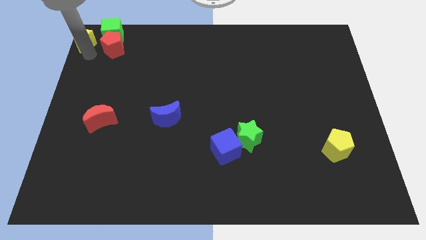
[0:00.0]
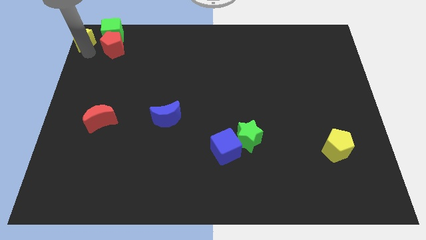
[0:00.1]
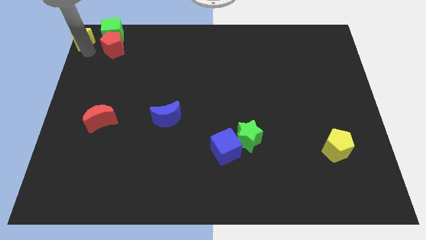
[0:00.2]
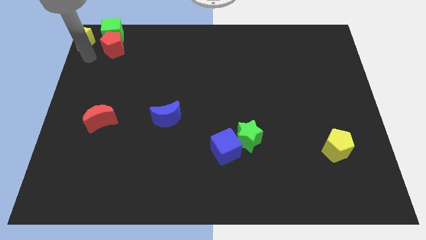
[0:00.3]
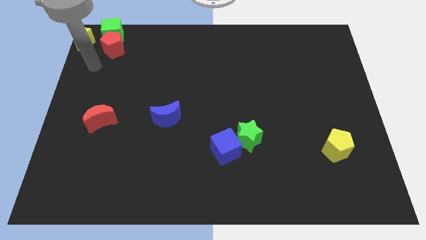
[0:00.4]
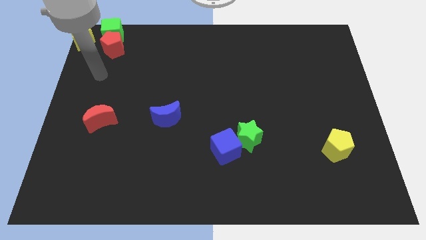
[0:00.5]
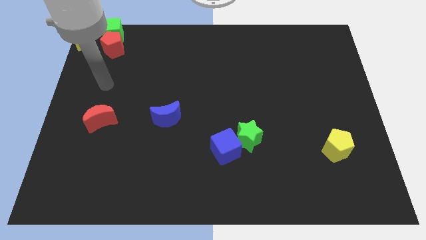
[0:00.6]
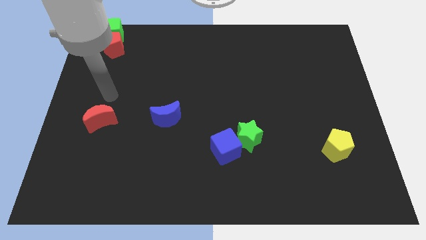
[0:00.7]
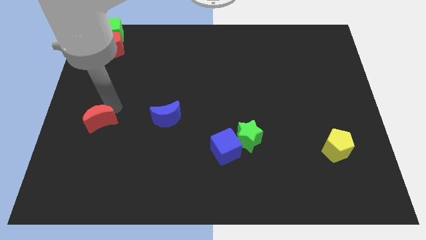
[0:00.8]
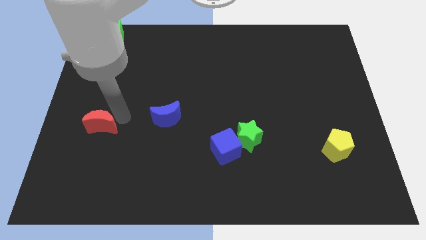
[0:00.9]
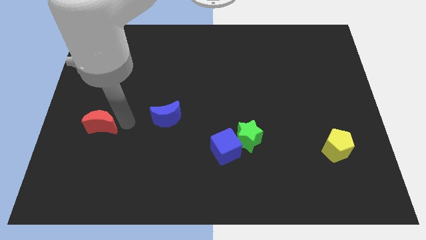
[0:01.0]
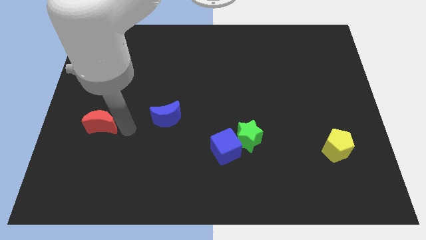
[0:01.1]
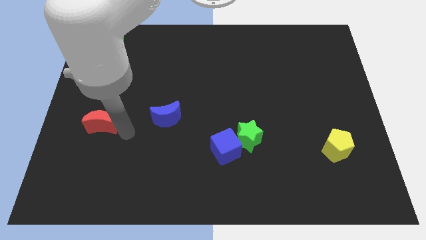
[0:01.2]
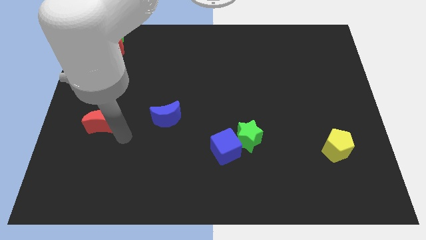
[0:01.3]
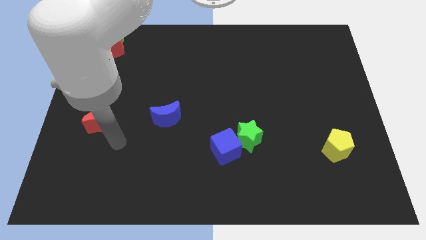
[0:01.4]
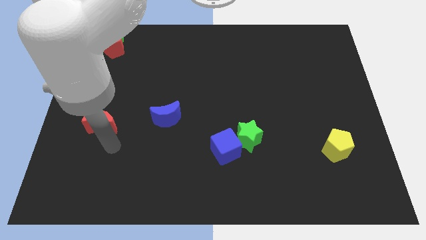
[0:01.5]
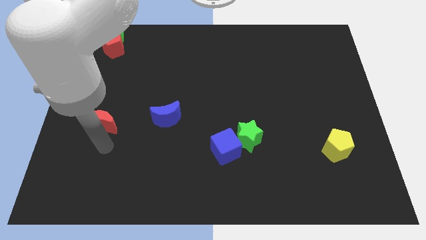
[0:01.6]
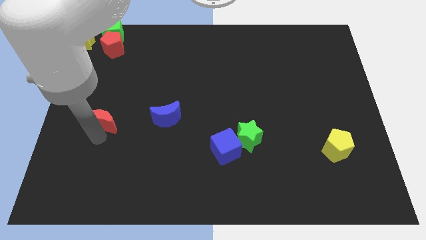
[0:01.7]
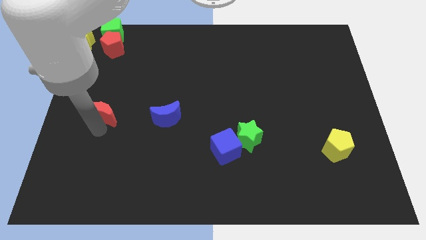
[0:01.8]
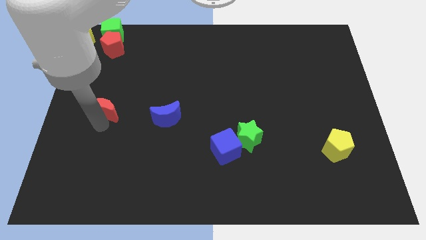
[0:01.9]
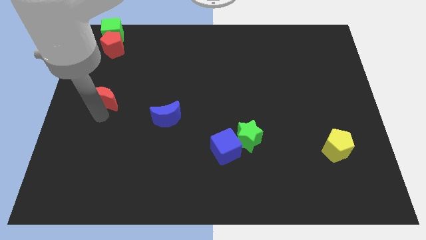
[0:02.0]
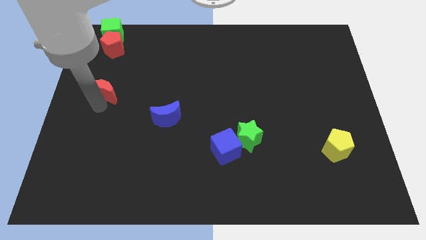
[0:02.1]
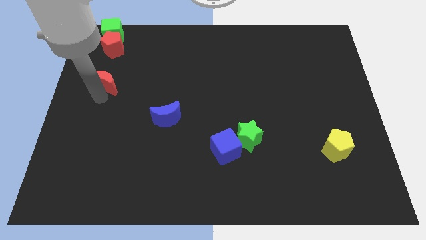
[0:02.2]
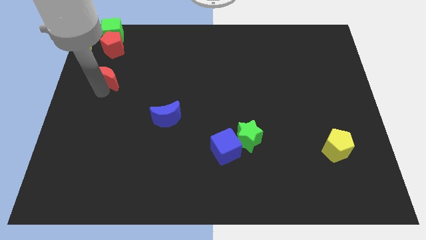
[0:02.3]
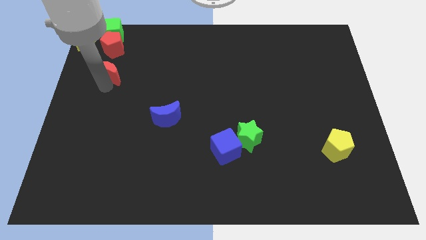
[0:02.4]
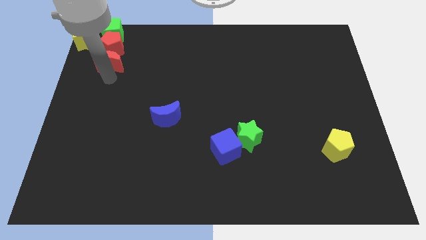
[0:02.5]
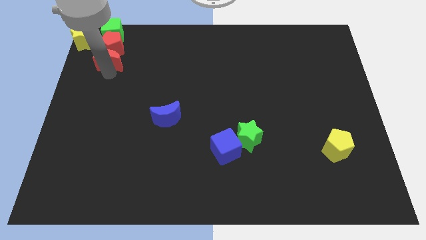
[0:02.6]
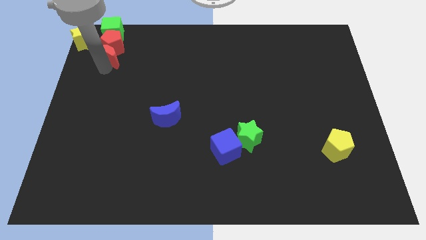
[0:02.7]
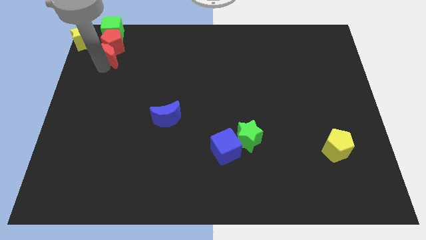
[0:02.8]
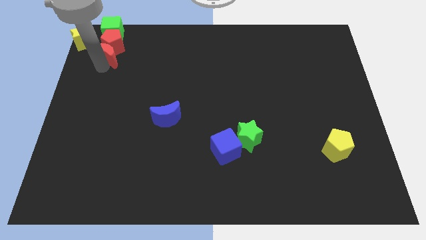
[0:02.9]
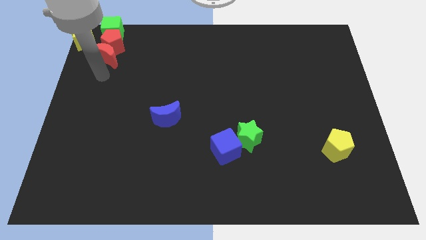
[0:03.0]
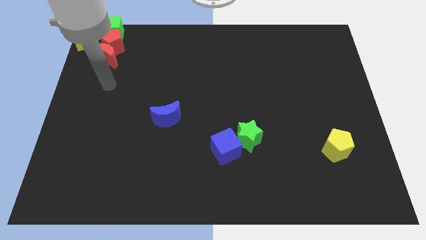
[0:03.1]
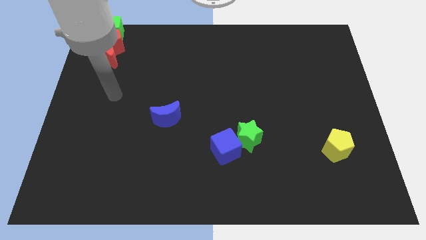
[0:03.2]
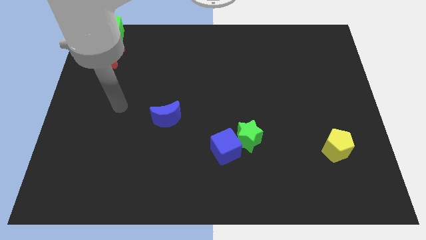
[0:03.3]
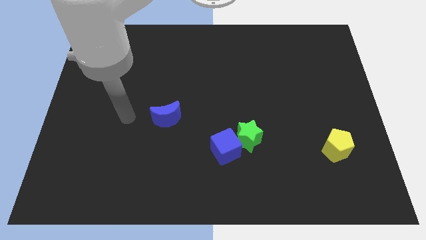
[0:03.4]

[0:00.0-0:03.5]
push the red crescent to the bottom of the red pentagon

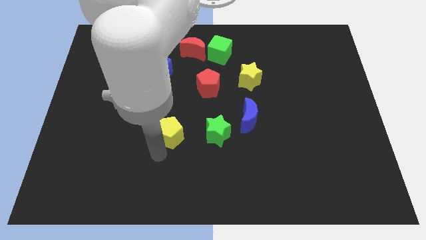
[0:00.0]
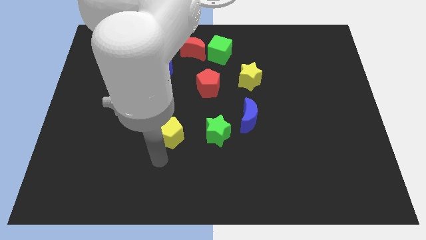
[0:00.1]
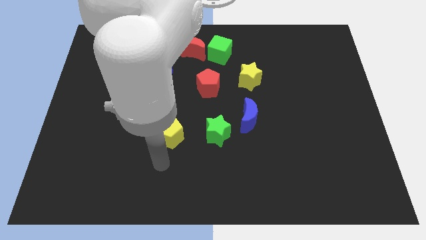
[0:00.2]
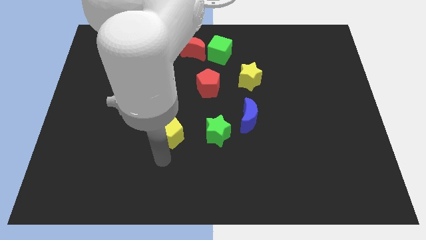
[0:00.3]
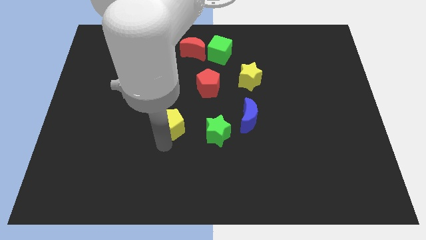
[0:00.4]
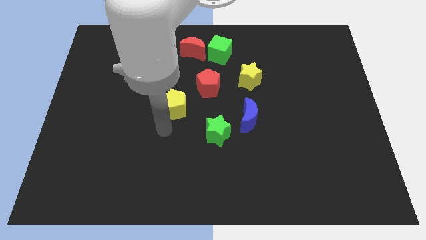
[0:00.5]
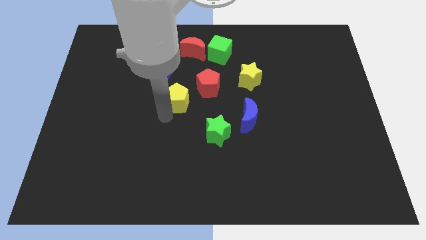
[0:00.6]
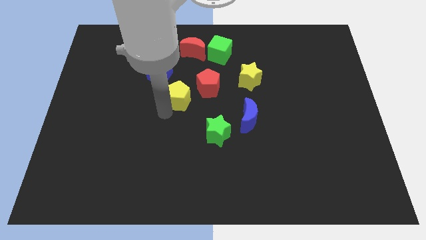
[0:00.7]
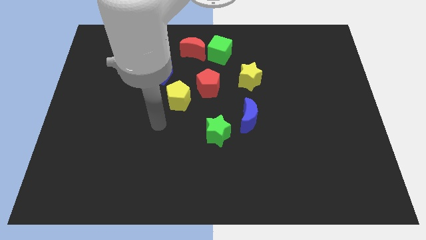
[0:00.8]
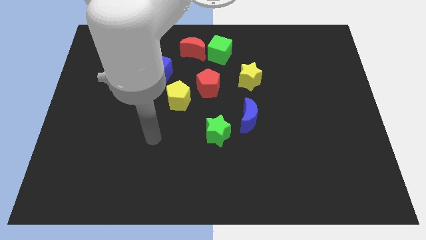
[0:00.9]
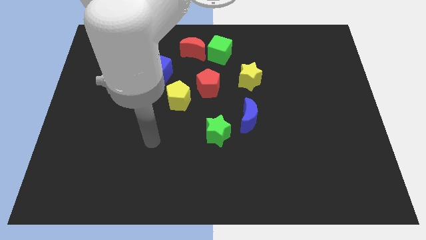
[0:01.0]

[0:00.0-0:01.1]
move your arm away from the yellow pentagon

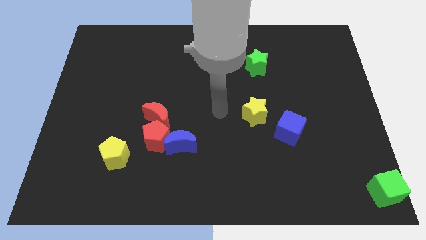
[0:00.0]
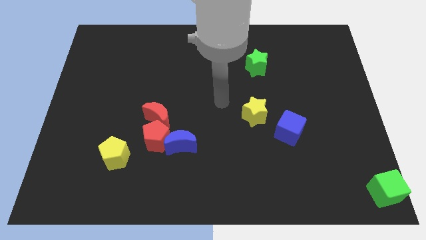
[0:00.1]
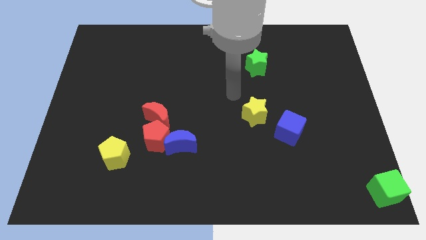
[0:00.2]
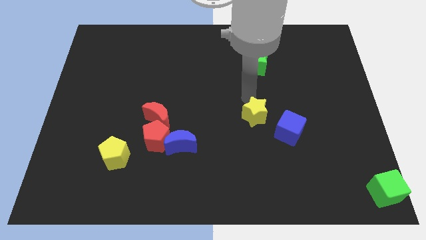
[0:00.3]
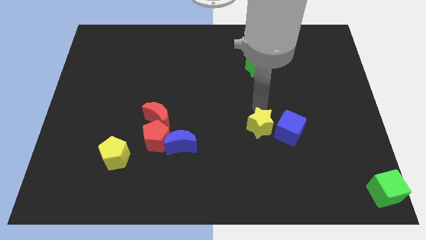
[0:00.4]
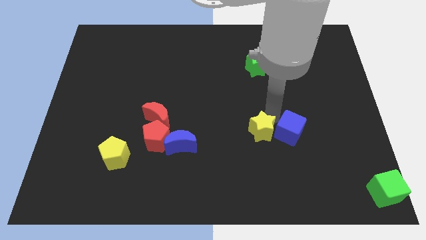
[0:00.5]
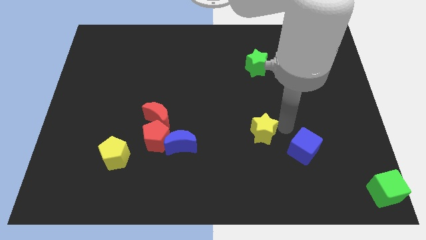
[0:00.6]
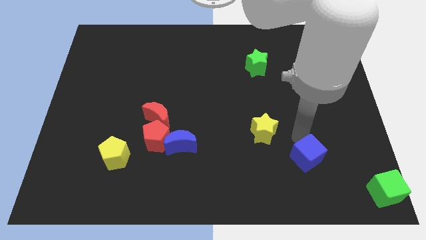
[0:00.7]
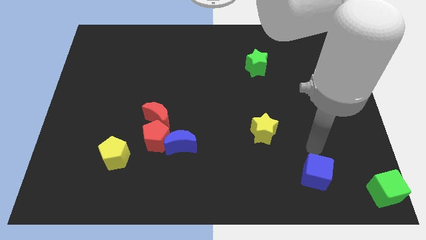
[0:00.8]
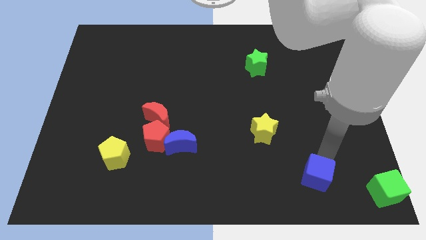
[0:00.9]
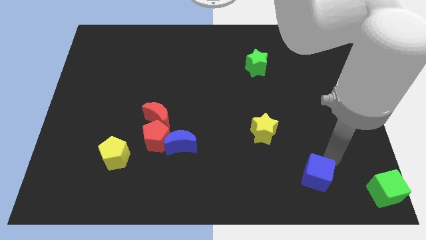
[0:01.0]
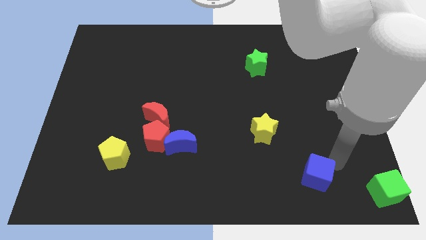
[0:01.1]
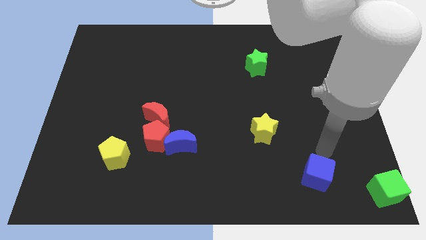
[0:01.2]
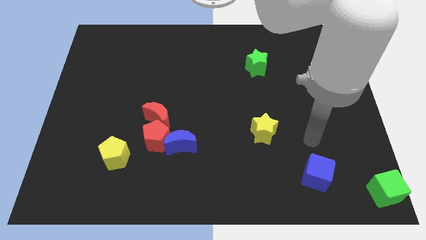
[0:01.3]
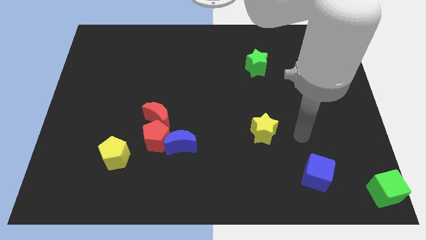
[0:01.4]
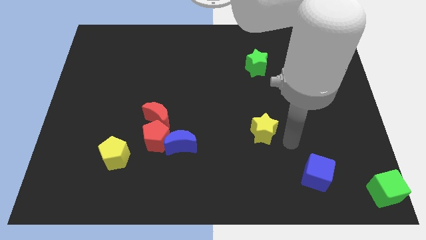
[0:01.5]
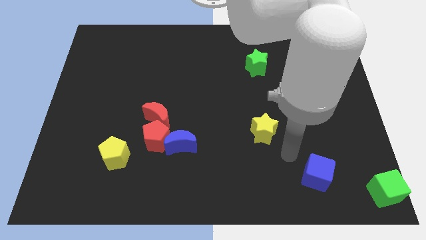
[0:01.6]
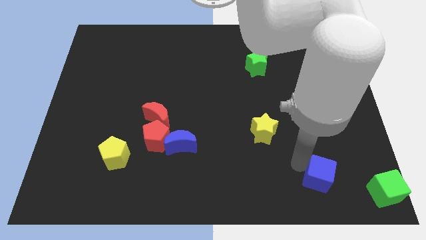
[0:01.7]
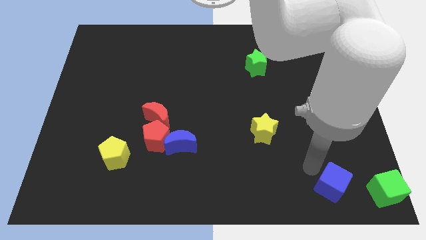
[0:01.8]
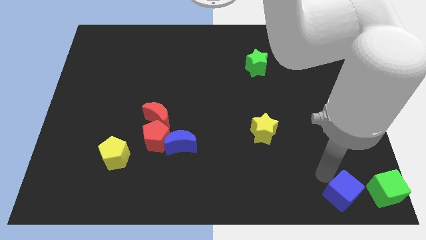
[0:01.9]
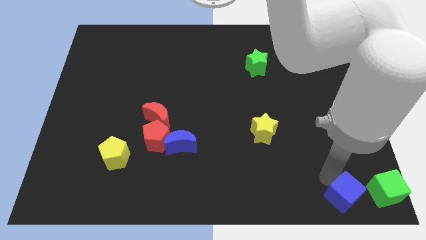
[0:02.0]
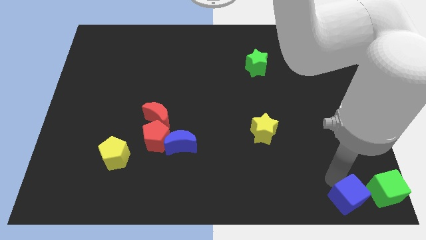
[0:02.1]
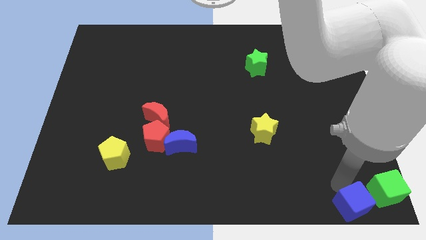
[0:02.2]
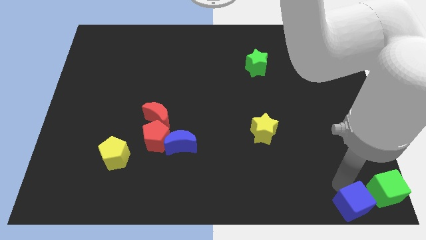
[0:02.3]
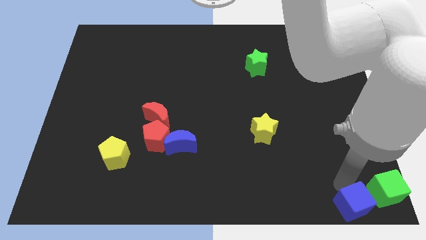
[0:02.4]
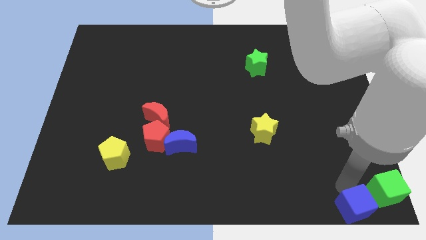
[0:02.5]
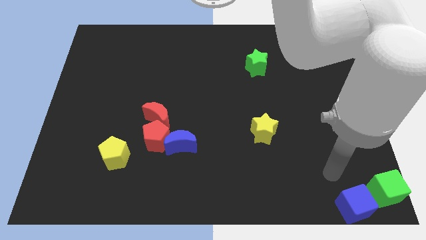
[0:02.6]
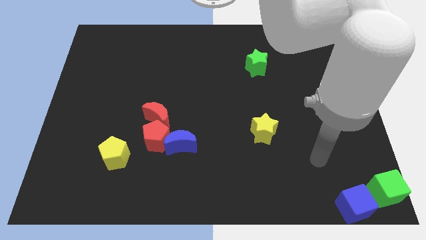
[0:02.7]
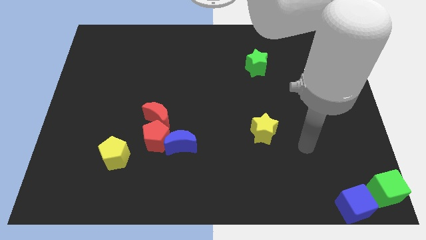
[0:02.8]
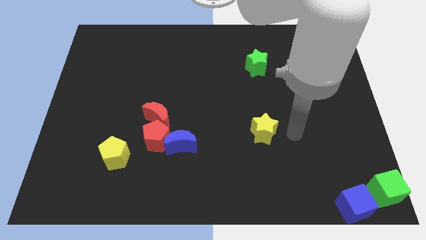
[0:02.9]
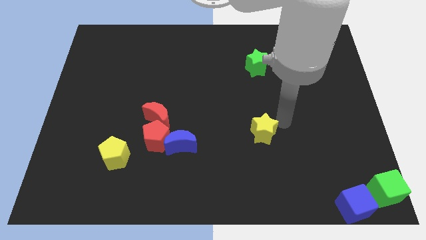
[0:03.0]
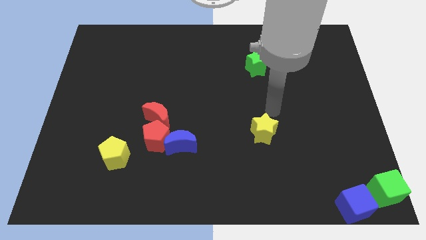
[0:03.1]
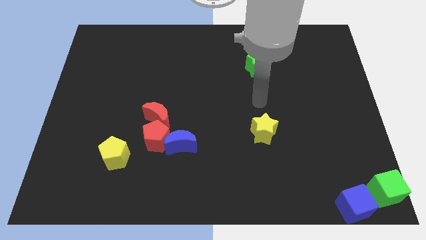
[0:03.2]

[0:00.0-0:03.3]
move the blue cube to the left side of the green cube

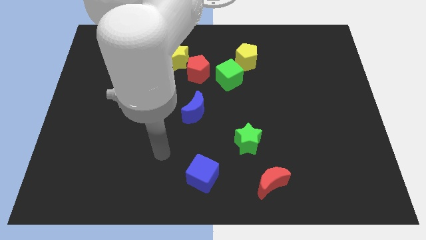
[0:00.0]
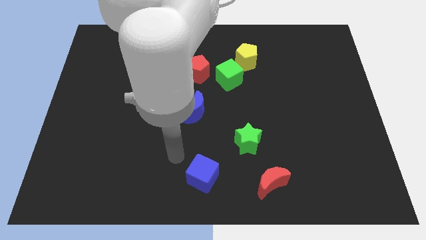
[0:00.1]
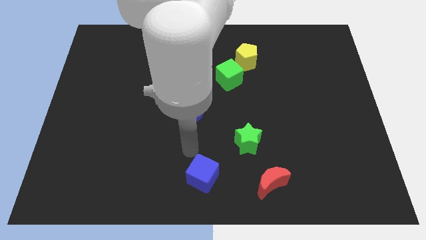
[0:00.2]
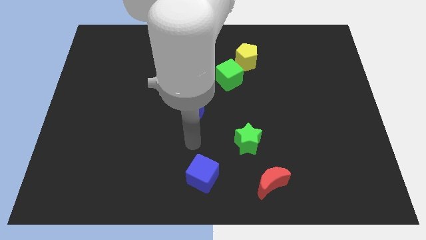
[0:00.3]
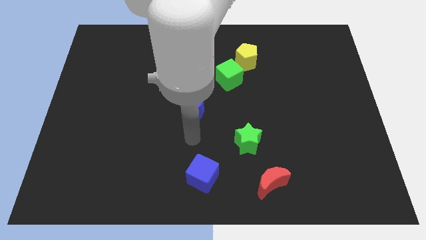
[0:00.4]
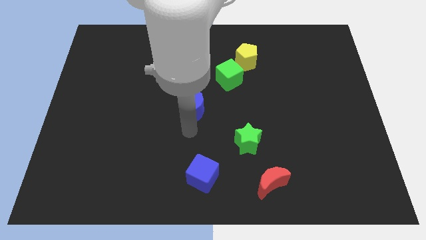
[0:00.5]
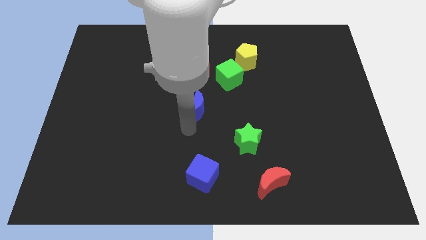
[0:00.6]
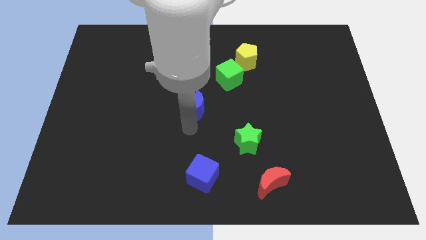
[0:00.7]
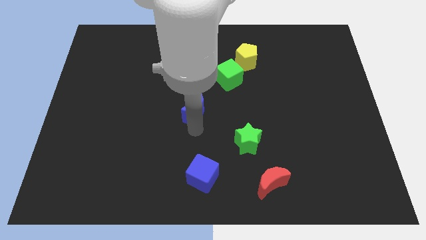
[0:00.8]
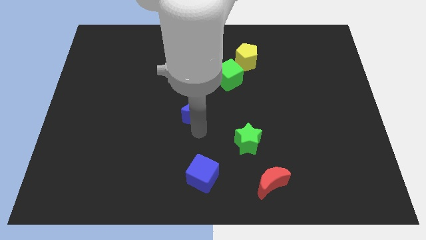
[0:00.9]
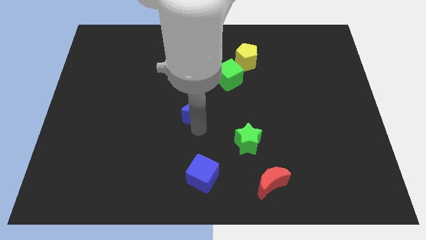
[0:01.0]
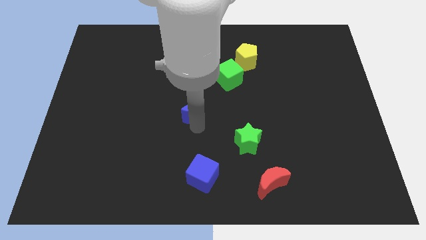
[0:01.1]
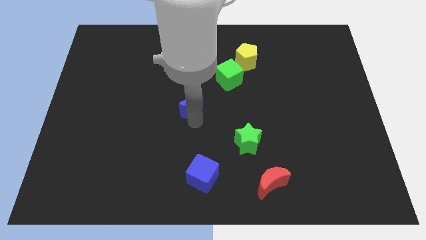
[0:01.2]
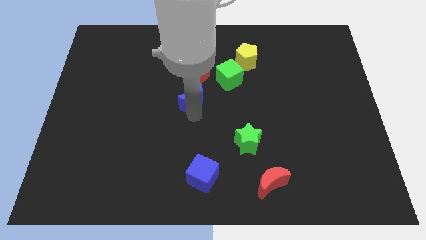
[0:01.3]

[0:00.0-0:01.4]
slightly push the blue moon upward
